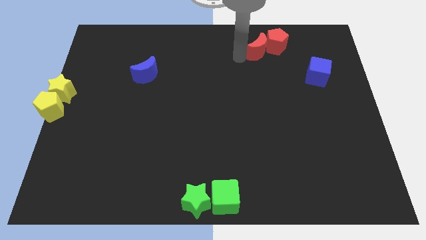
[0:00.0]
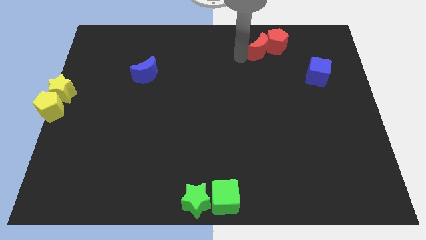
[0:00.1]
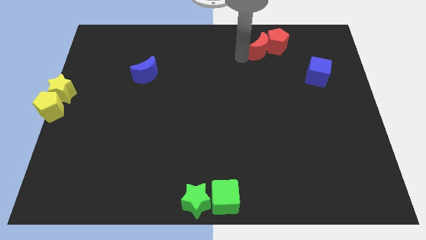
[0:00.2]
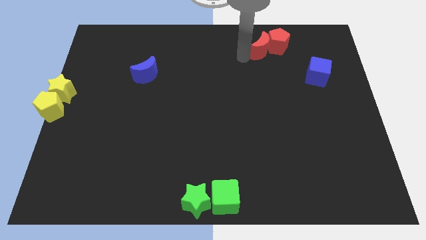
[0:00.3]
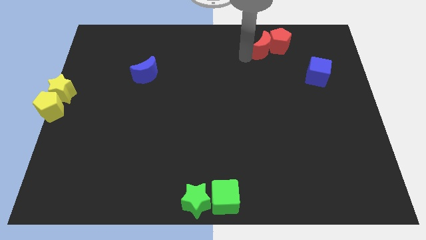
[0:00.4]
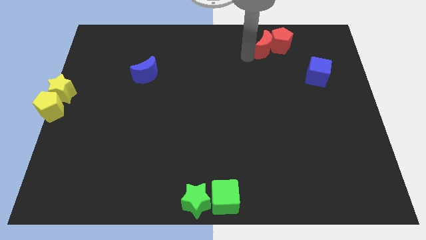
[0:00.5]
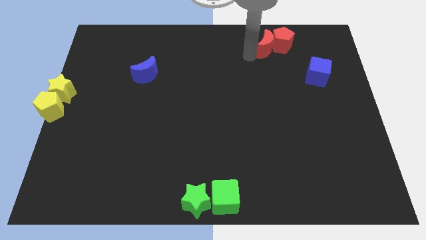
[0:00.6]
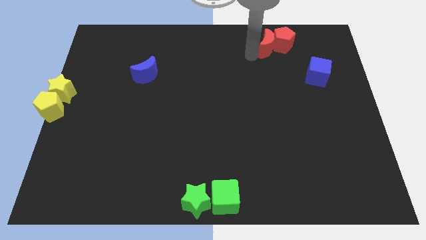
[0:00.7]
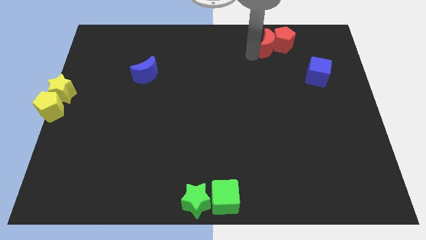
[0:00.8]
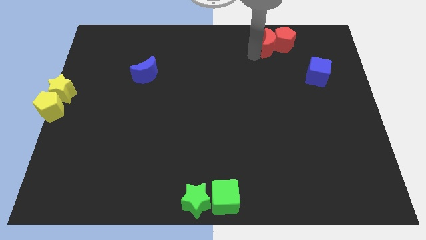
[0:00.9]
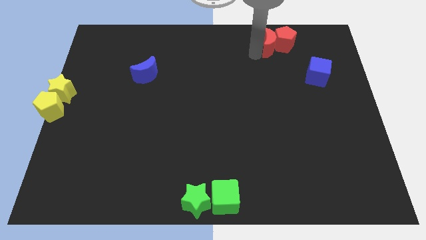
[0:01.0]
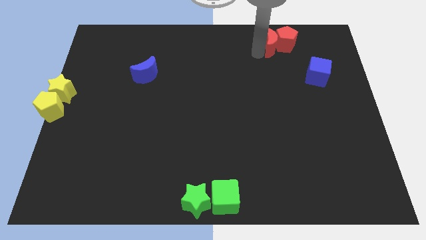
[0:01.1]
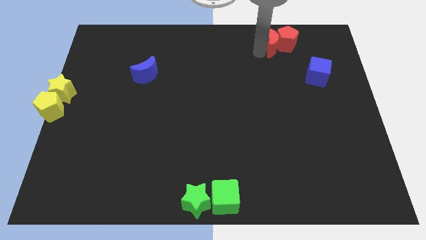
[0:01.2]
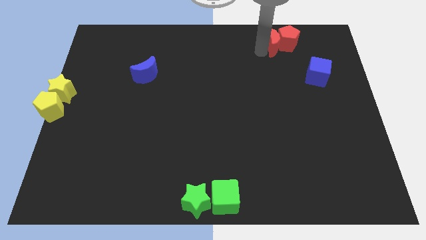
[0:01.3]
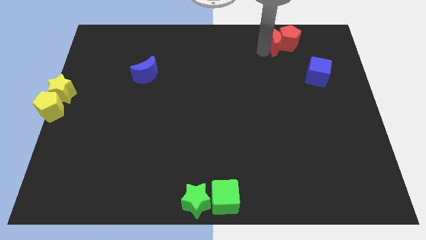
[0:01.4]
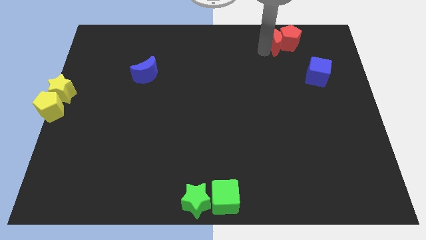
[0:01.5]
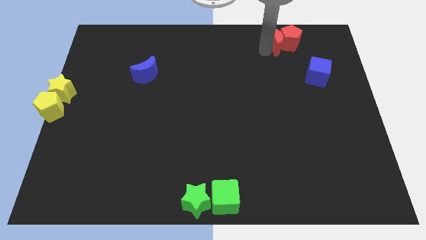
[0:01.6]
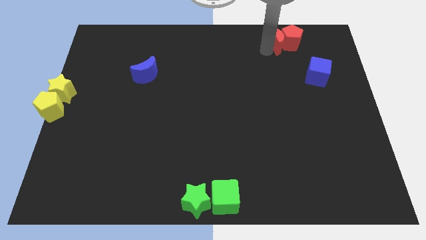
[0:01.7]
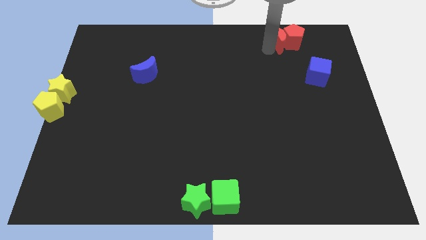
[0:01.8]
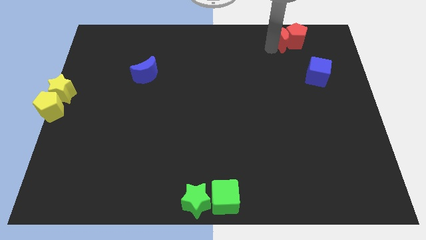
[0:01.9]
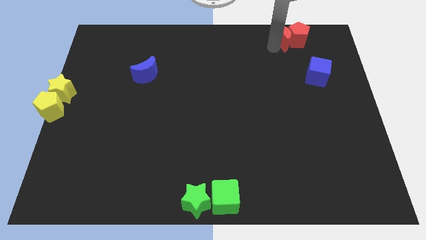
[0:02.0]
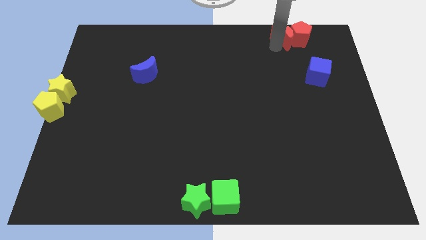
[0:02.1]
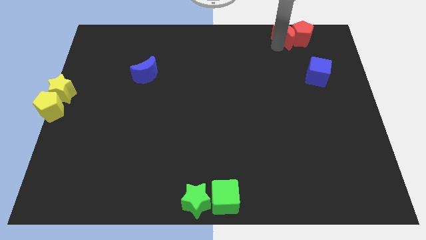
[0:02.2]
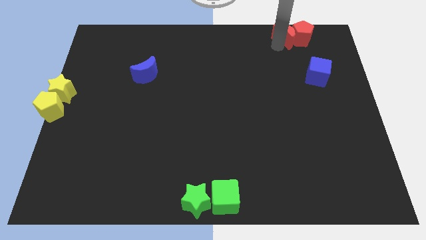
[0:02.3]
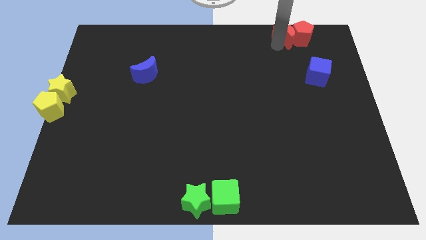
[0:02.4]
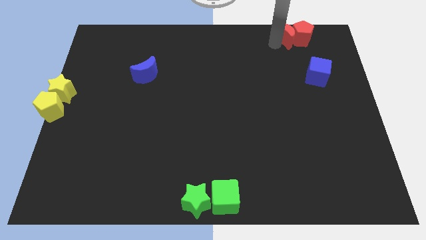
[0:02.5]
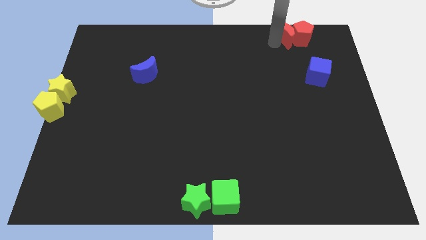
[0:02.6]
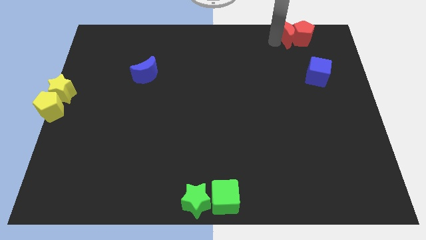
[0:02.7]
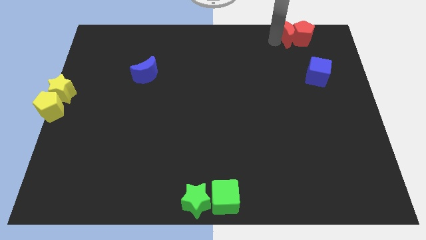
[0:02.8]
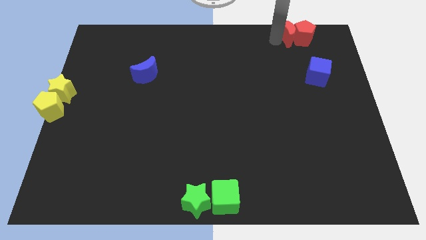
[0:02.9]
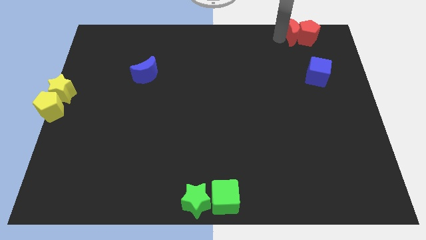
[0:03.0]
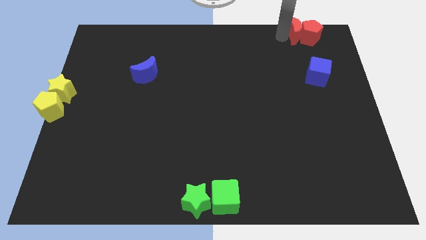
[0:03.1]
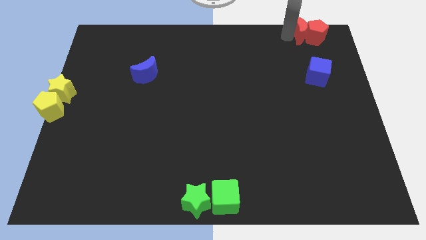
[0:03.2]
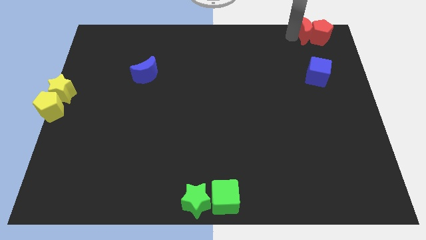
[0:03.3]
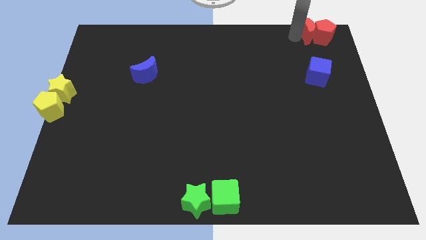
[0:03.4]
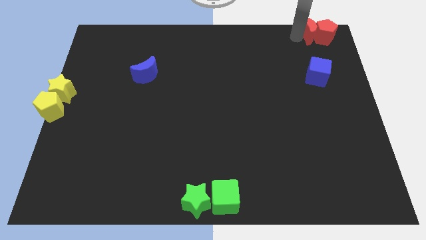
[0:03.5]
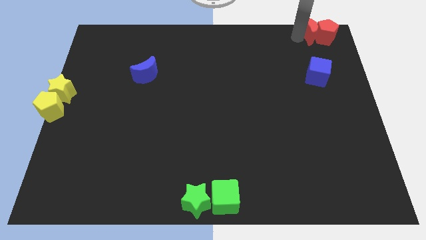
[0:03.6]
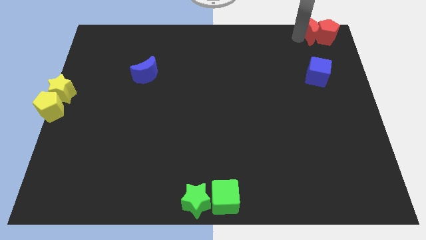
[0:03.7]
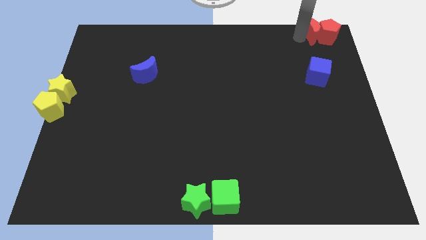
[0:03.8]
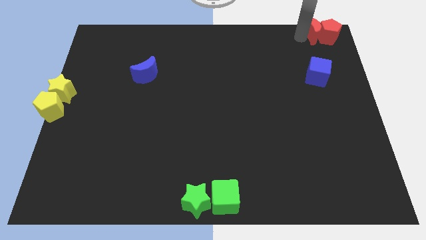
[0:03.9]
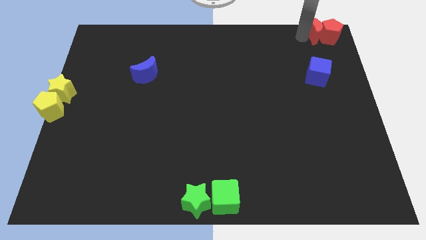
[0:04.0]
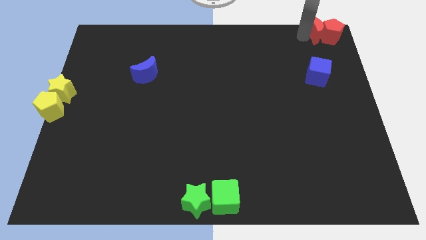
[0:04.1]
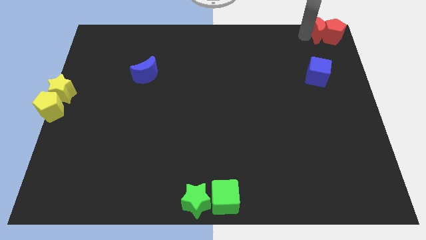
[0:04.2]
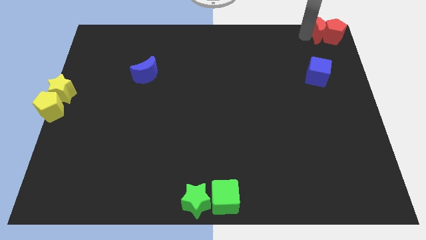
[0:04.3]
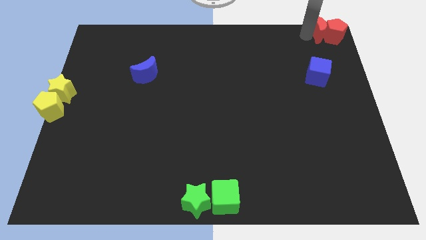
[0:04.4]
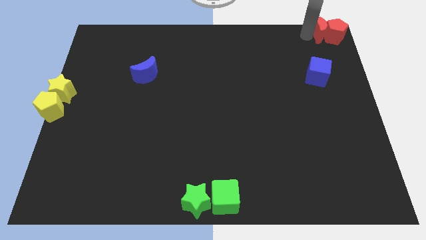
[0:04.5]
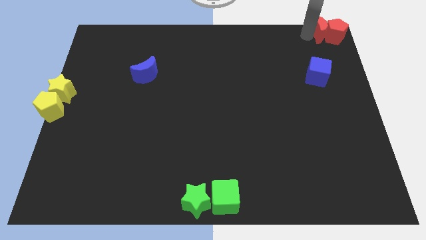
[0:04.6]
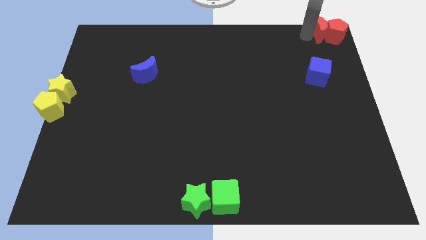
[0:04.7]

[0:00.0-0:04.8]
push the red pentagon and red crescent the top right

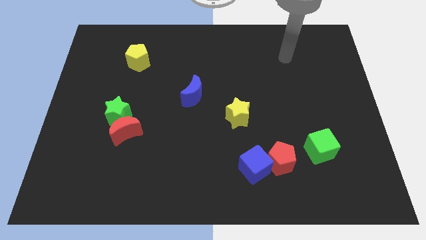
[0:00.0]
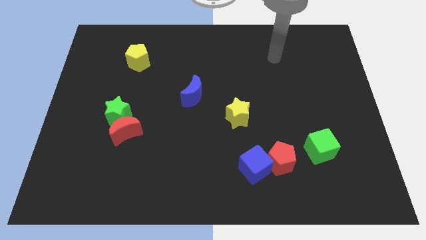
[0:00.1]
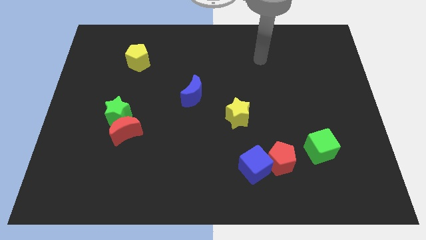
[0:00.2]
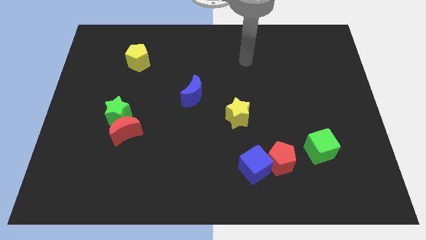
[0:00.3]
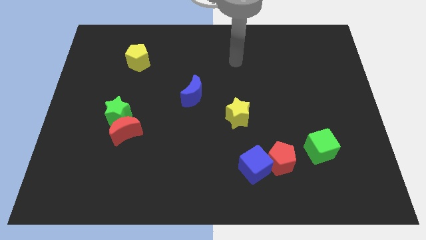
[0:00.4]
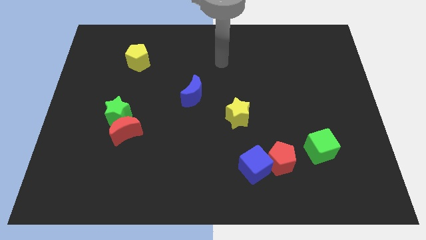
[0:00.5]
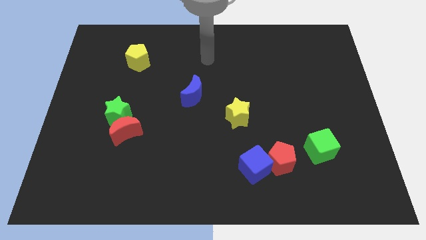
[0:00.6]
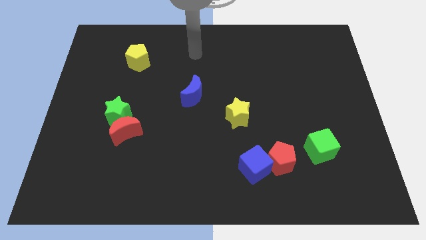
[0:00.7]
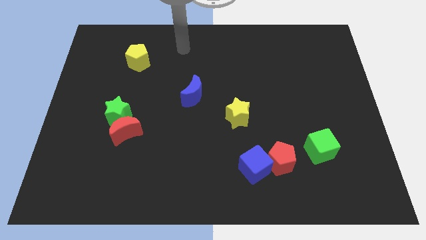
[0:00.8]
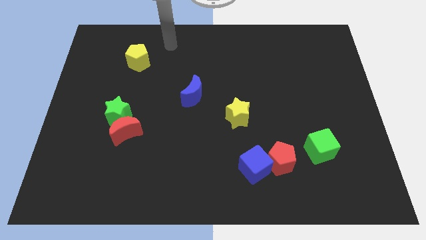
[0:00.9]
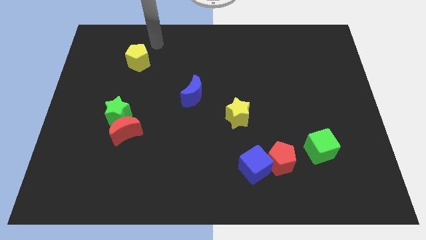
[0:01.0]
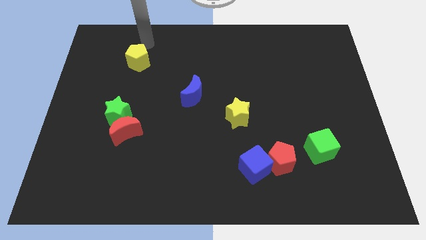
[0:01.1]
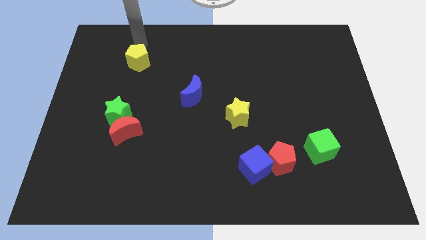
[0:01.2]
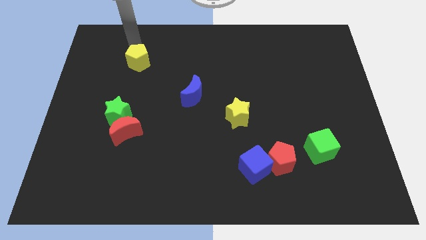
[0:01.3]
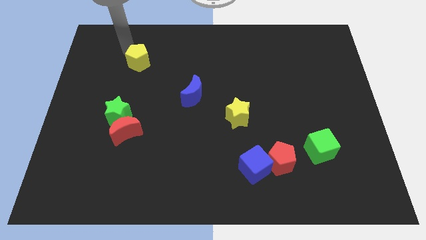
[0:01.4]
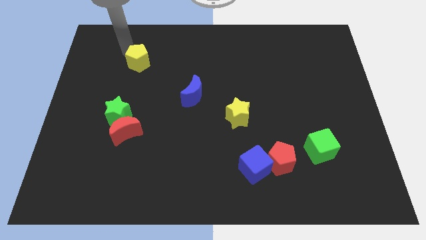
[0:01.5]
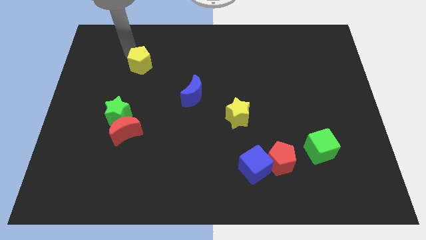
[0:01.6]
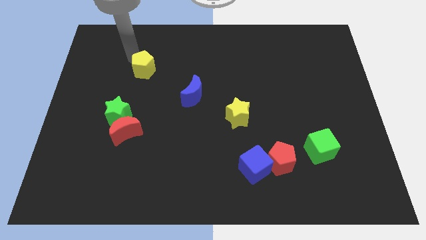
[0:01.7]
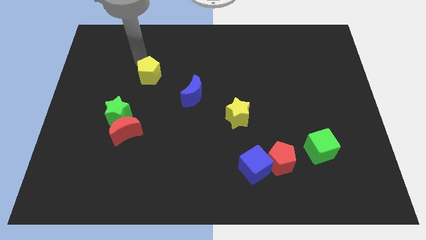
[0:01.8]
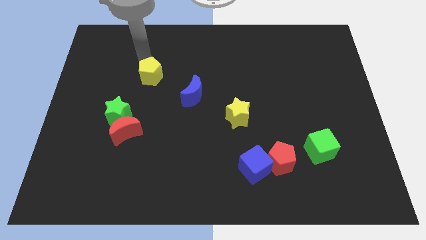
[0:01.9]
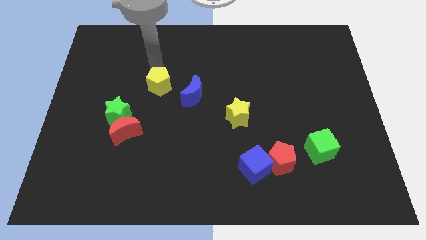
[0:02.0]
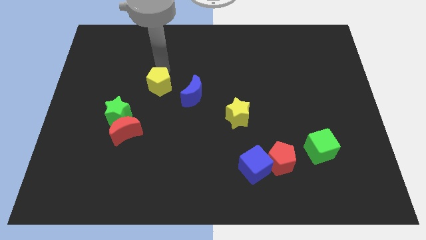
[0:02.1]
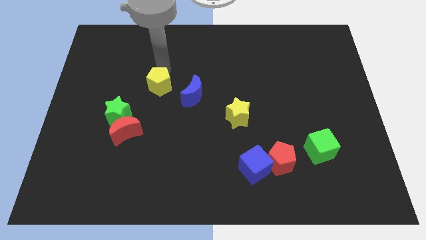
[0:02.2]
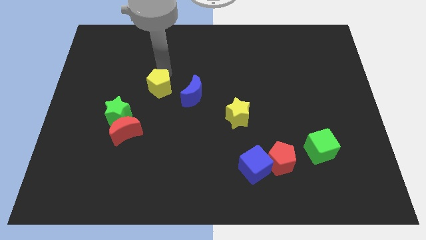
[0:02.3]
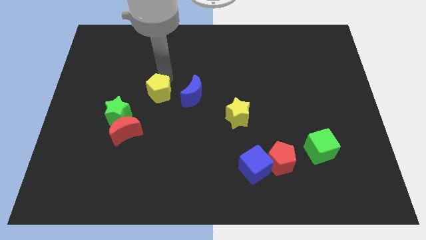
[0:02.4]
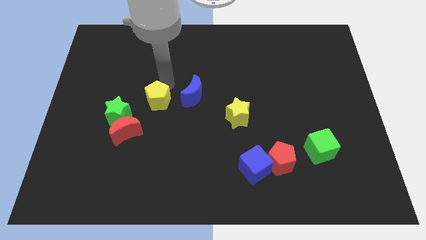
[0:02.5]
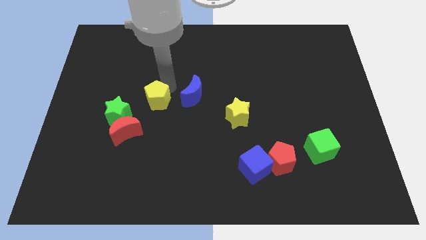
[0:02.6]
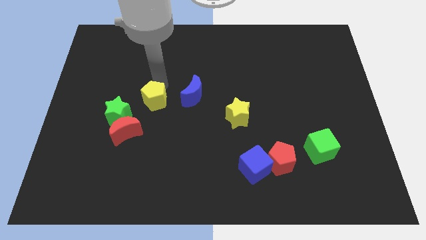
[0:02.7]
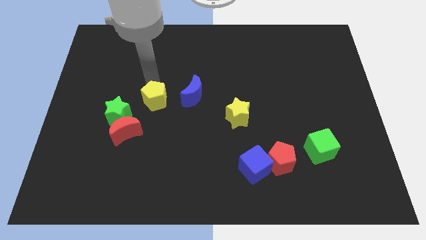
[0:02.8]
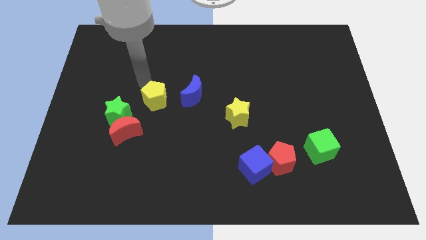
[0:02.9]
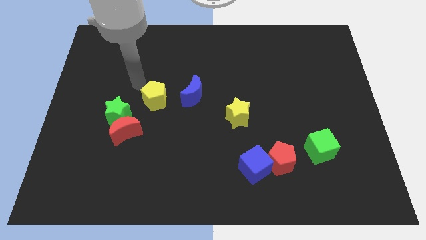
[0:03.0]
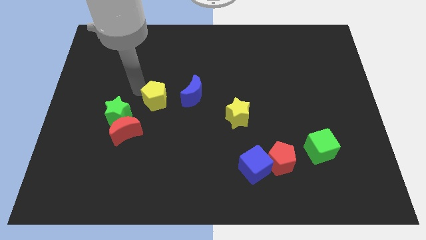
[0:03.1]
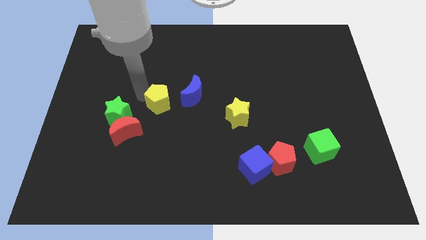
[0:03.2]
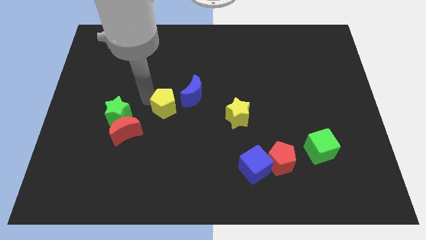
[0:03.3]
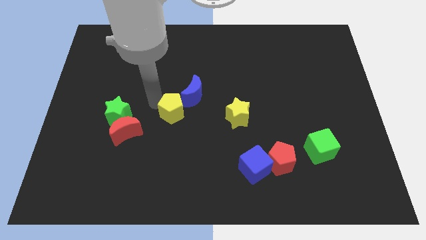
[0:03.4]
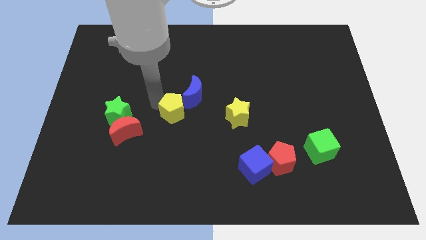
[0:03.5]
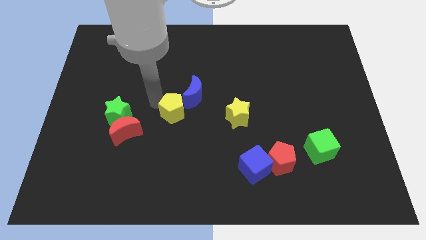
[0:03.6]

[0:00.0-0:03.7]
place the yellow pentagon right to the green star

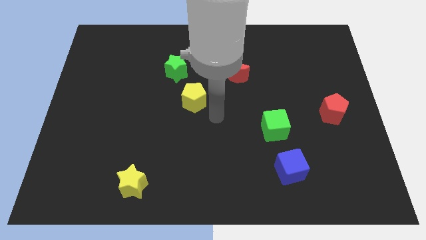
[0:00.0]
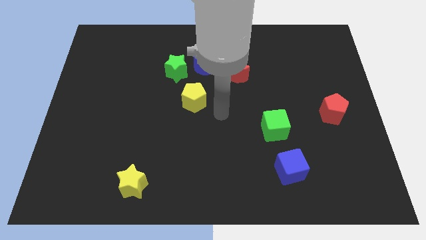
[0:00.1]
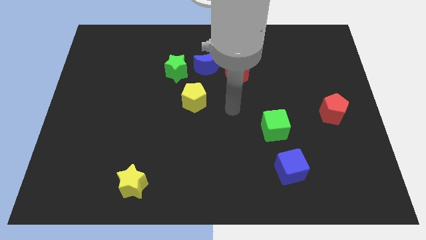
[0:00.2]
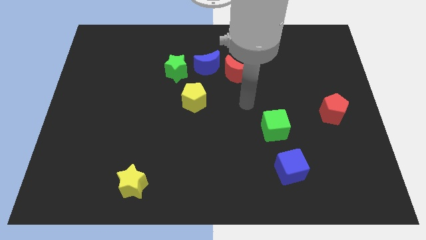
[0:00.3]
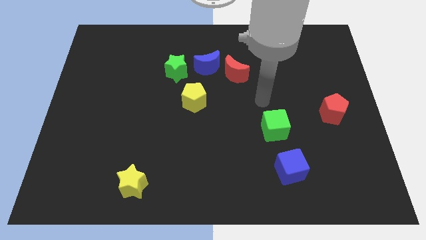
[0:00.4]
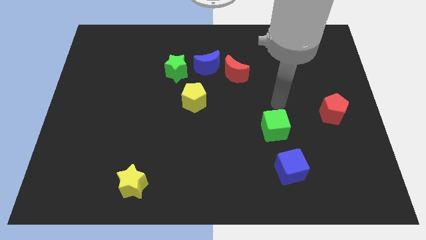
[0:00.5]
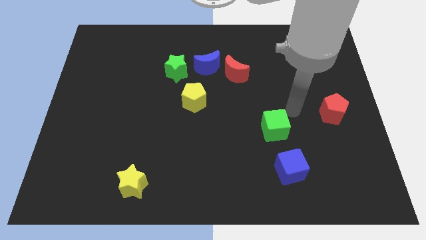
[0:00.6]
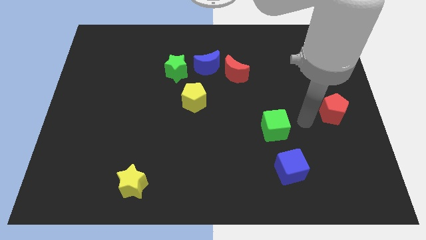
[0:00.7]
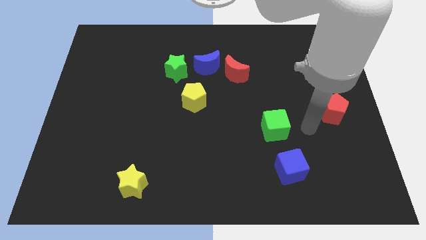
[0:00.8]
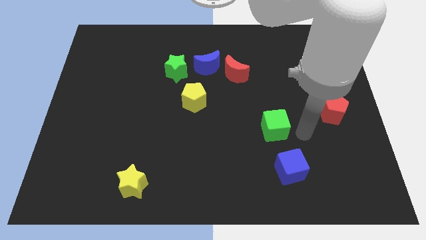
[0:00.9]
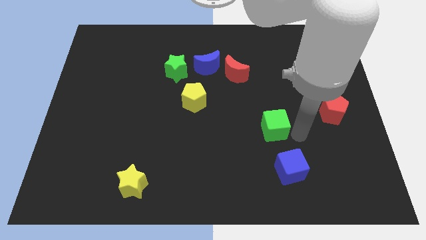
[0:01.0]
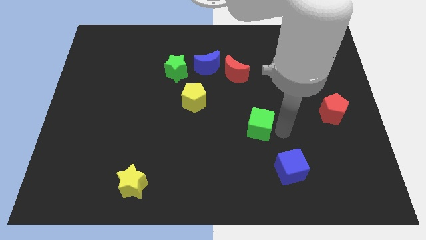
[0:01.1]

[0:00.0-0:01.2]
place your arm to the right of the green cube
